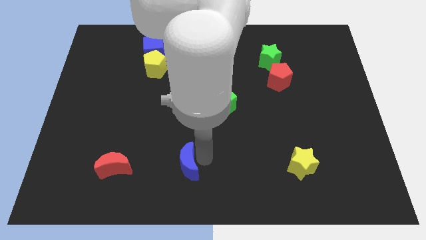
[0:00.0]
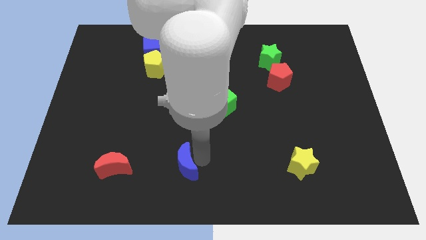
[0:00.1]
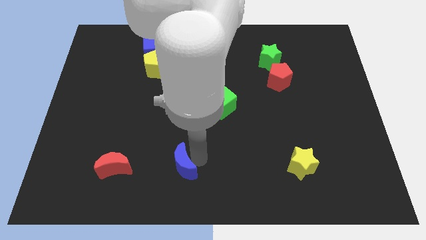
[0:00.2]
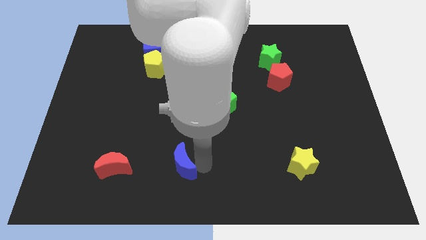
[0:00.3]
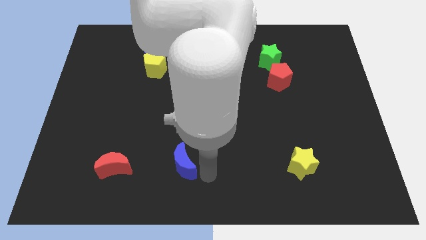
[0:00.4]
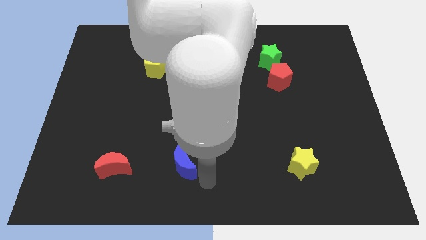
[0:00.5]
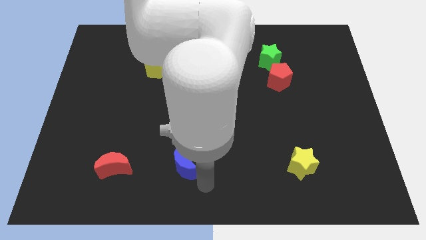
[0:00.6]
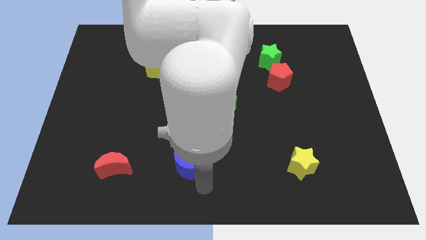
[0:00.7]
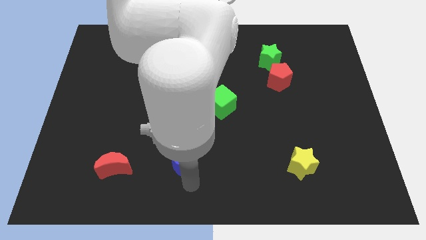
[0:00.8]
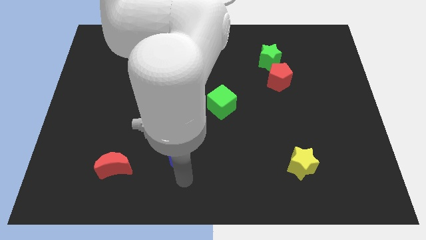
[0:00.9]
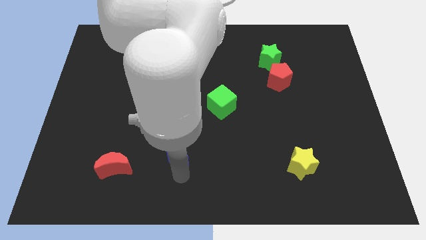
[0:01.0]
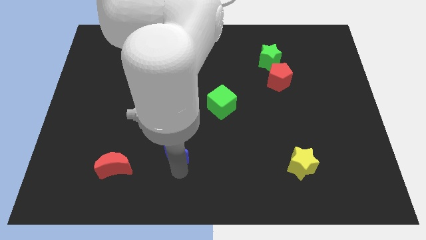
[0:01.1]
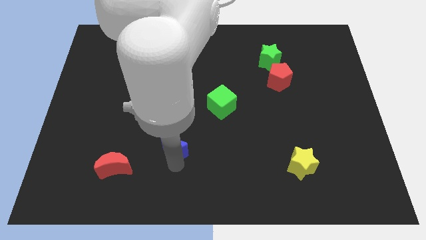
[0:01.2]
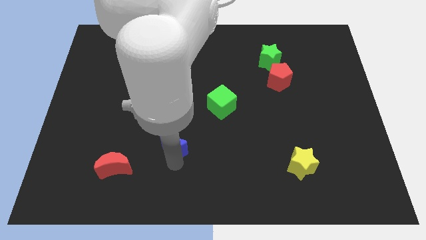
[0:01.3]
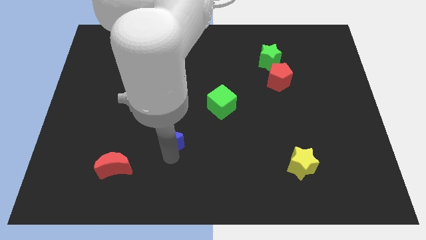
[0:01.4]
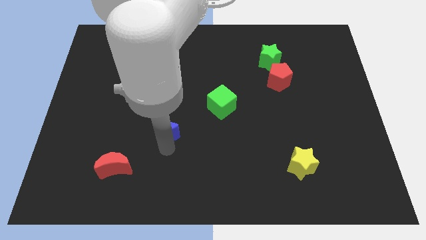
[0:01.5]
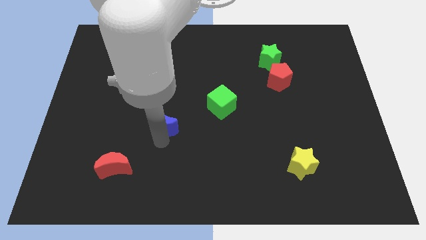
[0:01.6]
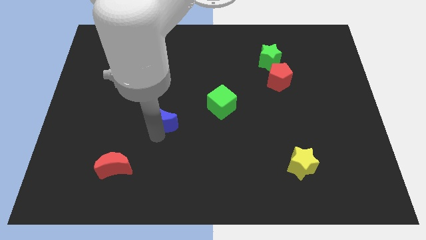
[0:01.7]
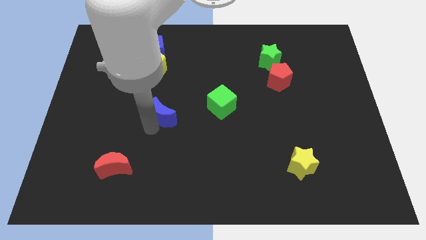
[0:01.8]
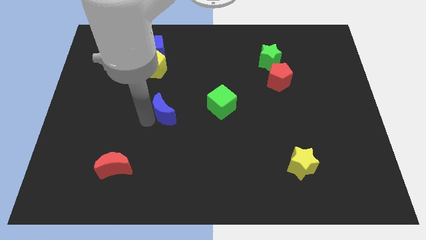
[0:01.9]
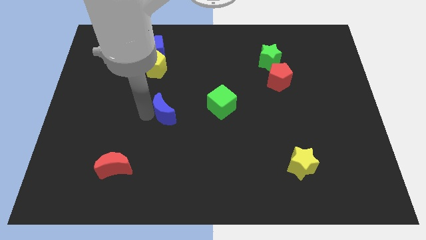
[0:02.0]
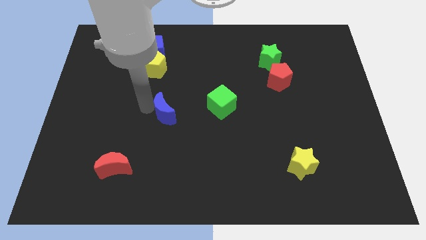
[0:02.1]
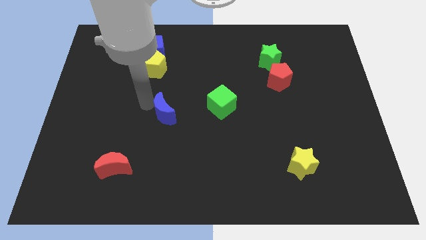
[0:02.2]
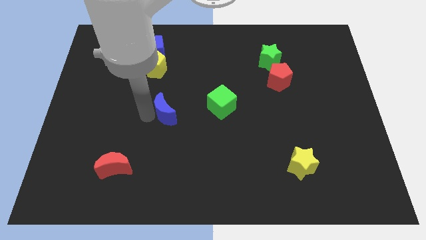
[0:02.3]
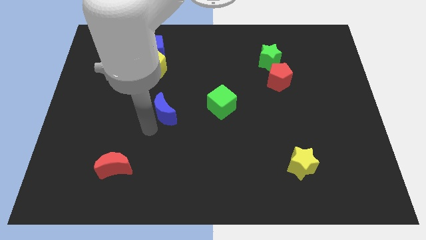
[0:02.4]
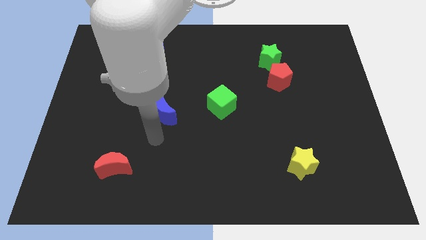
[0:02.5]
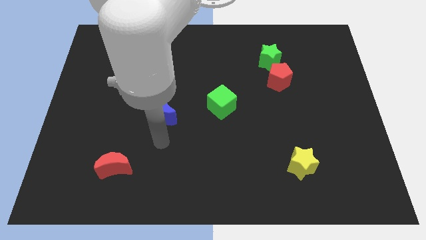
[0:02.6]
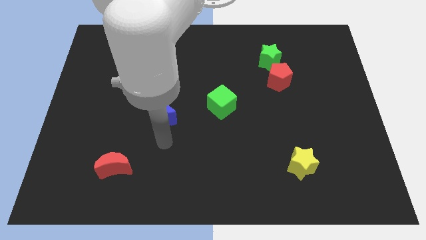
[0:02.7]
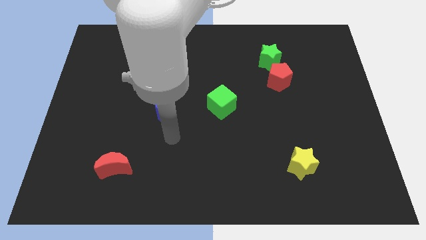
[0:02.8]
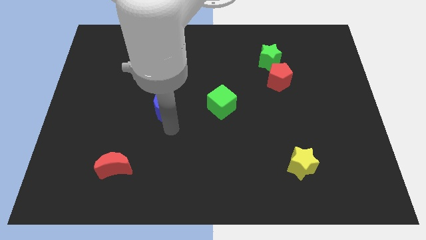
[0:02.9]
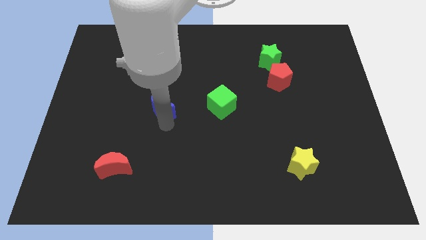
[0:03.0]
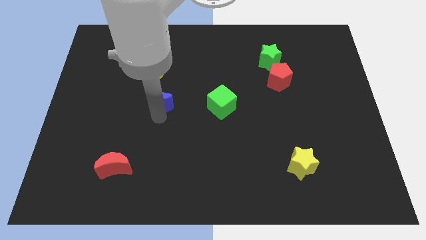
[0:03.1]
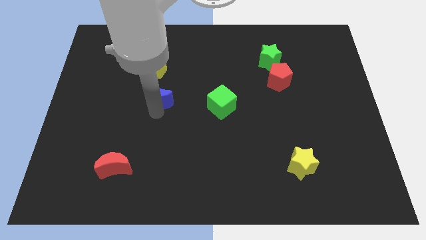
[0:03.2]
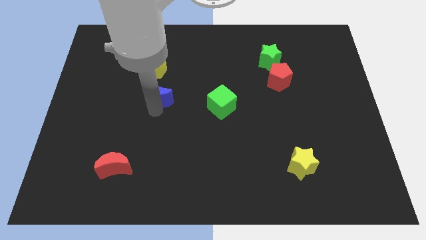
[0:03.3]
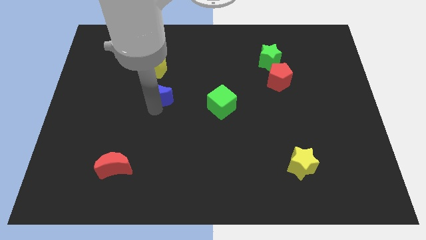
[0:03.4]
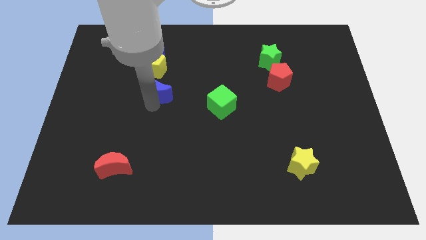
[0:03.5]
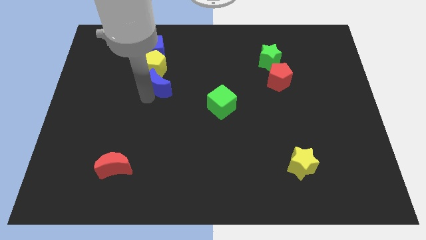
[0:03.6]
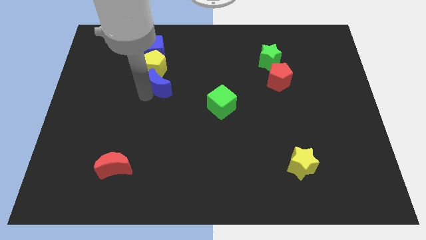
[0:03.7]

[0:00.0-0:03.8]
put the blue crescent underneath the yellow pentagon to form a vertical line of blocks

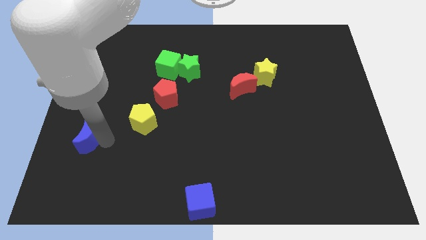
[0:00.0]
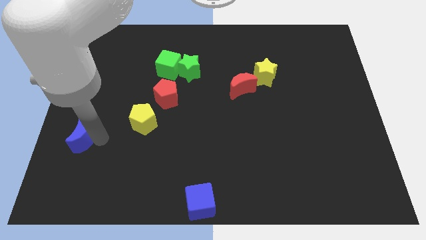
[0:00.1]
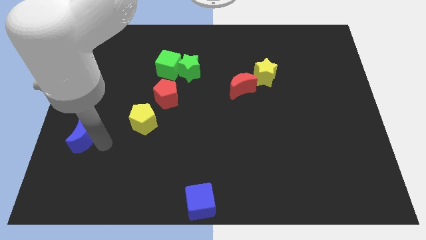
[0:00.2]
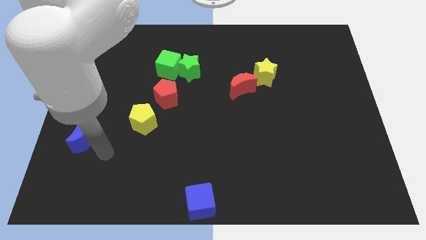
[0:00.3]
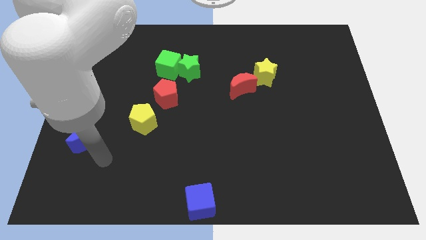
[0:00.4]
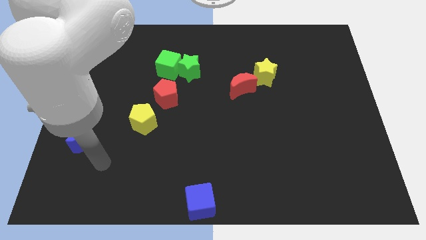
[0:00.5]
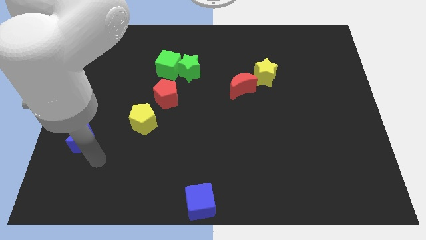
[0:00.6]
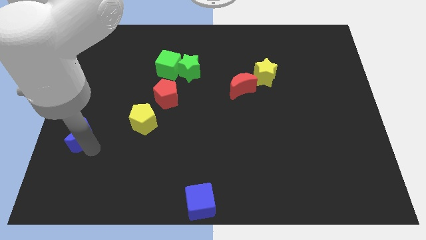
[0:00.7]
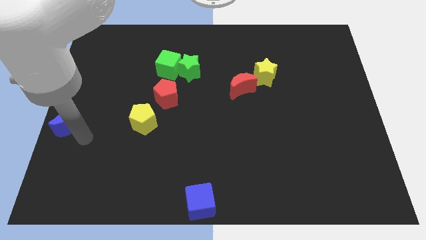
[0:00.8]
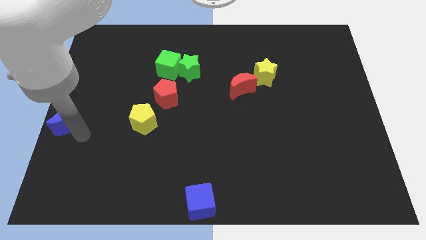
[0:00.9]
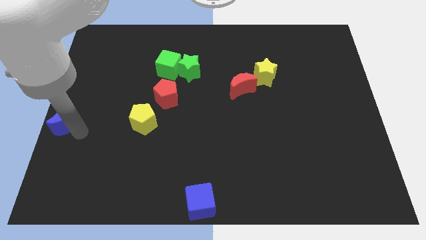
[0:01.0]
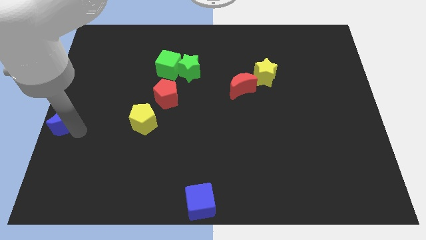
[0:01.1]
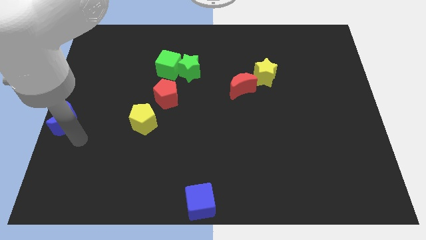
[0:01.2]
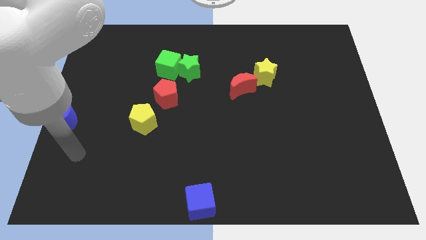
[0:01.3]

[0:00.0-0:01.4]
place the blue moon left to the yellow pentagon

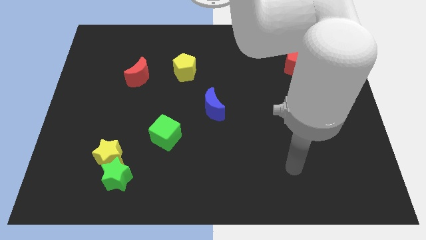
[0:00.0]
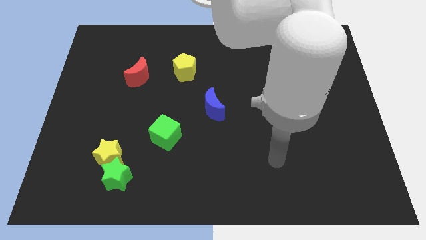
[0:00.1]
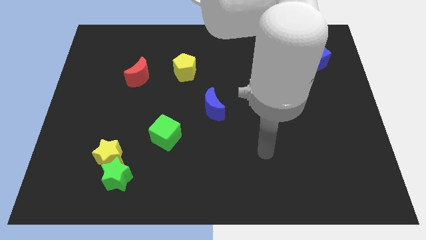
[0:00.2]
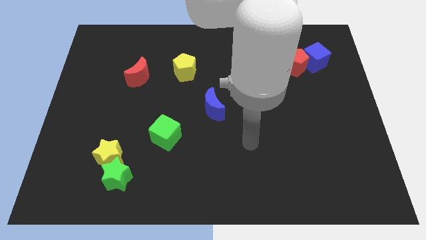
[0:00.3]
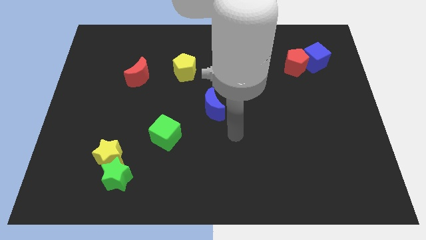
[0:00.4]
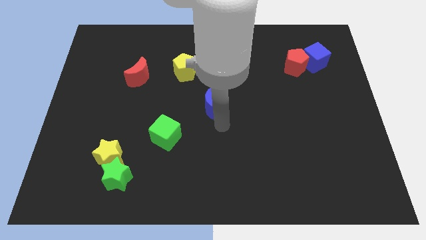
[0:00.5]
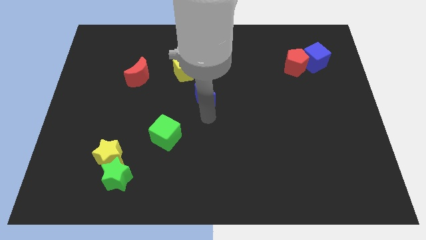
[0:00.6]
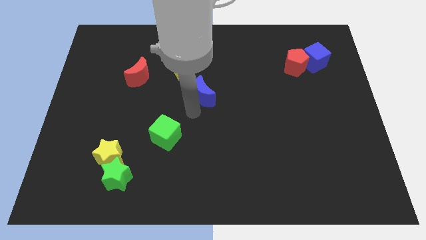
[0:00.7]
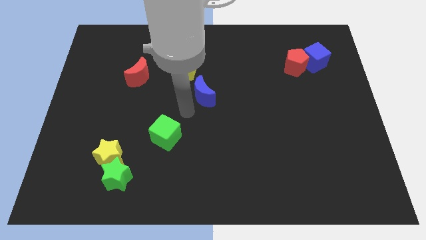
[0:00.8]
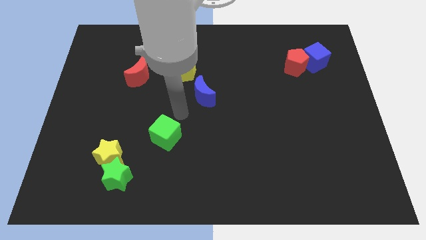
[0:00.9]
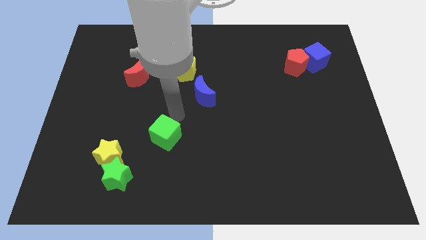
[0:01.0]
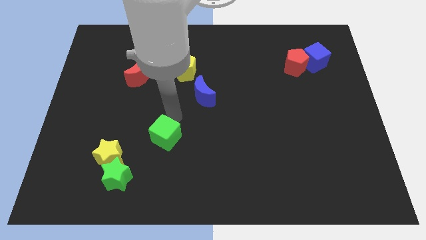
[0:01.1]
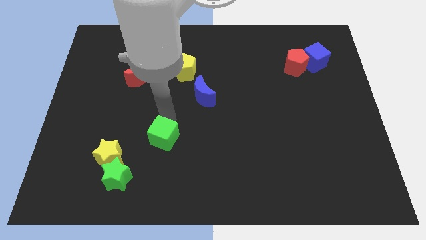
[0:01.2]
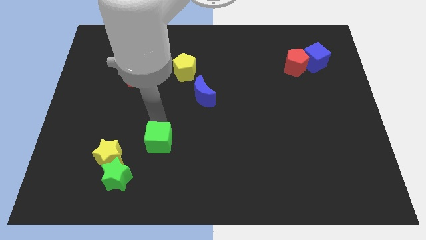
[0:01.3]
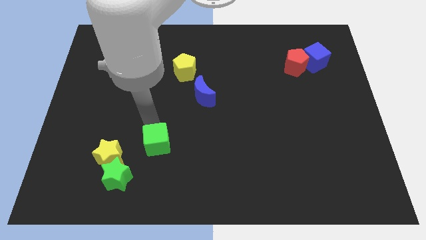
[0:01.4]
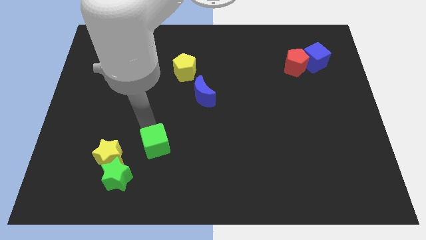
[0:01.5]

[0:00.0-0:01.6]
move the arm to the green cube

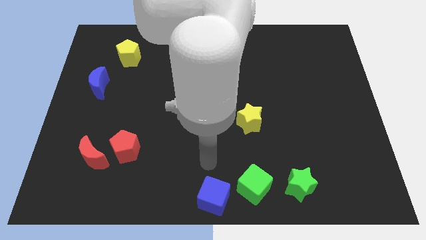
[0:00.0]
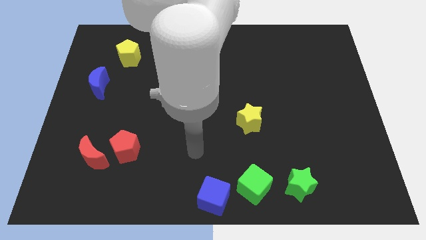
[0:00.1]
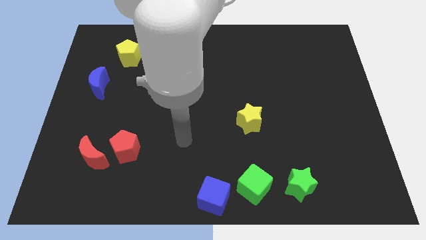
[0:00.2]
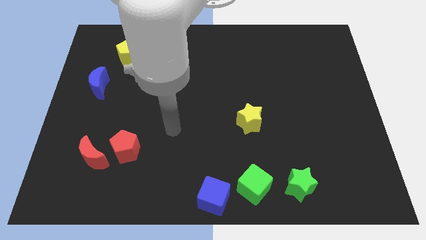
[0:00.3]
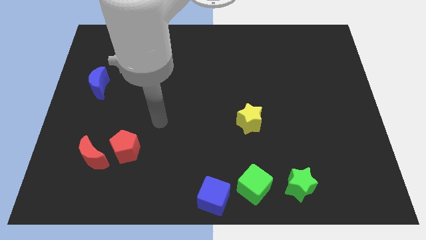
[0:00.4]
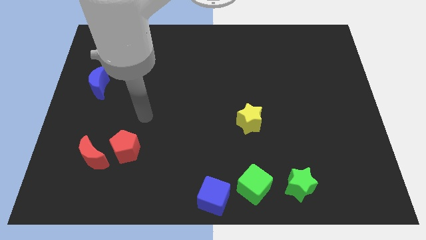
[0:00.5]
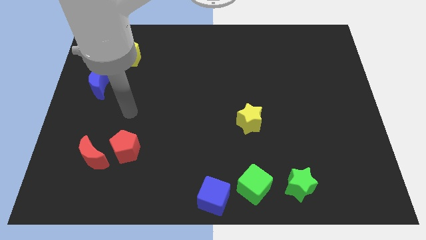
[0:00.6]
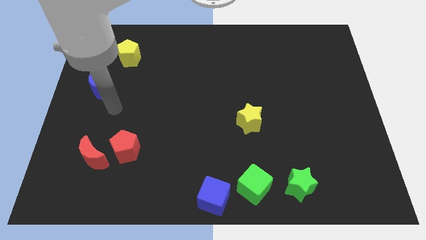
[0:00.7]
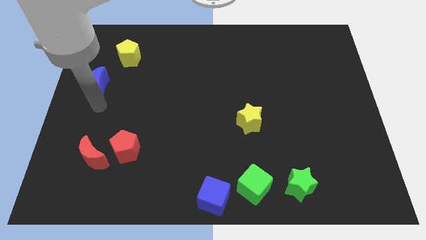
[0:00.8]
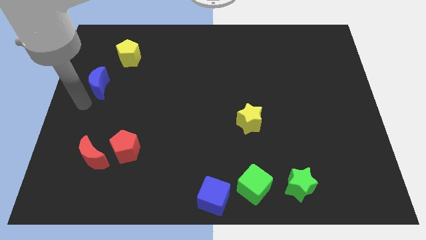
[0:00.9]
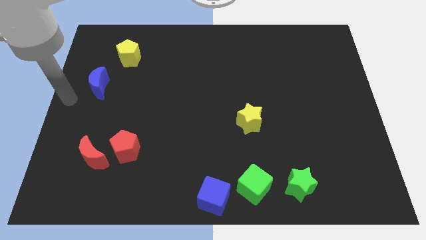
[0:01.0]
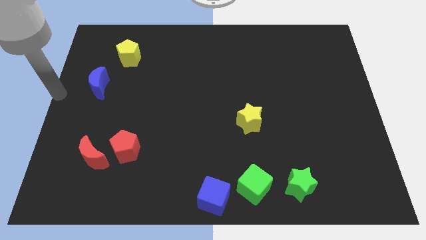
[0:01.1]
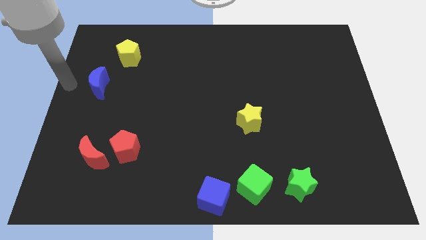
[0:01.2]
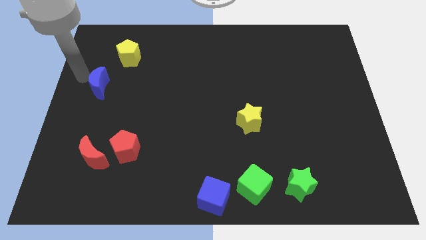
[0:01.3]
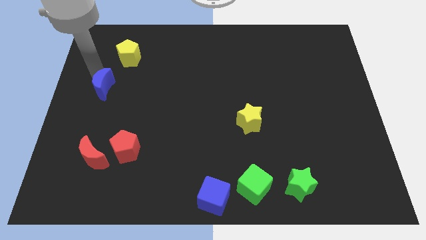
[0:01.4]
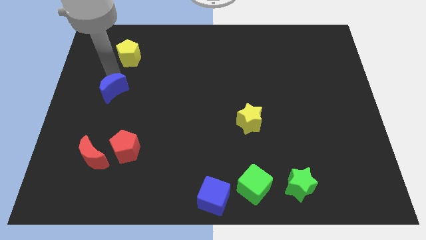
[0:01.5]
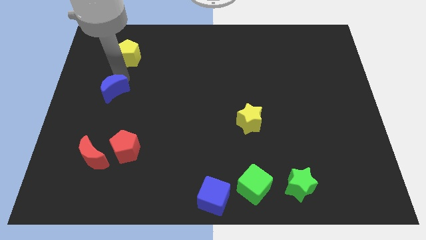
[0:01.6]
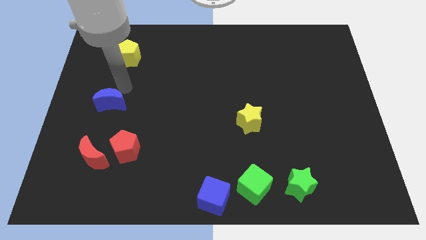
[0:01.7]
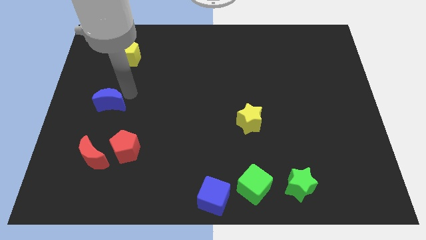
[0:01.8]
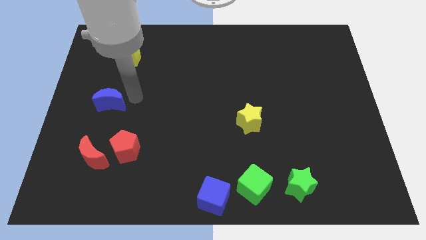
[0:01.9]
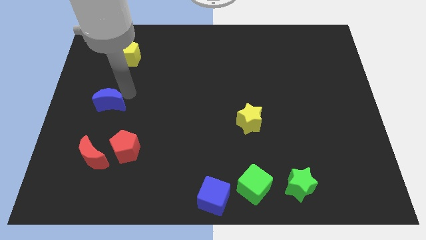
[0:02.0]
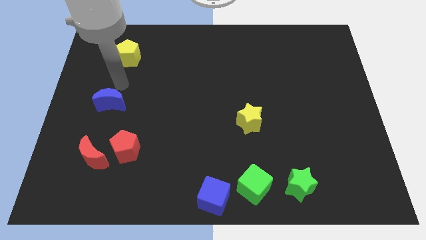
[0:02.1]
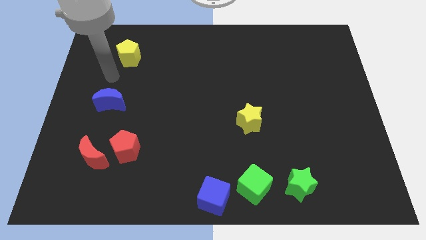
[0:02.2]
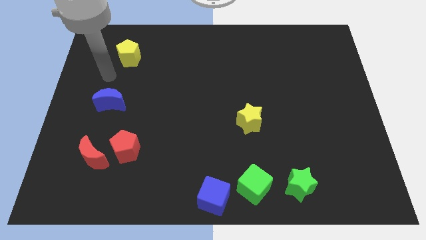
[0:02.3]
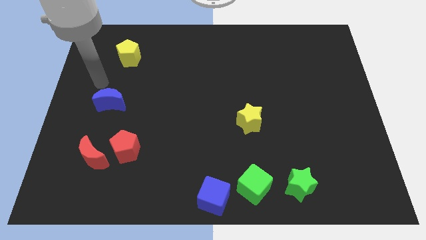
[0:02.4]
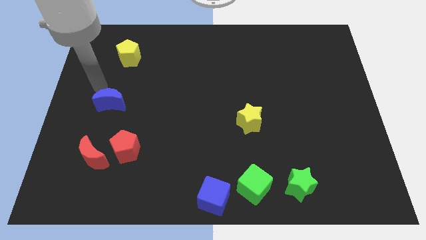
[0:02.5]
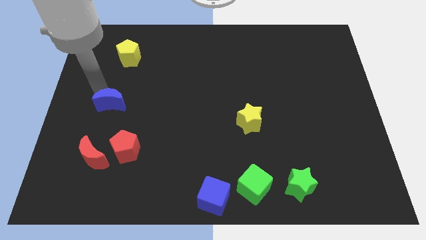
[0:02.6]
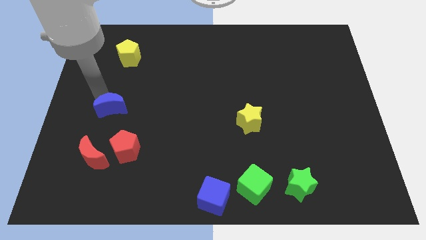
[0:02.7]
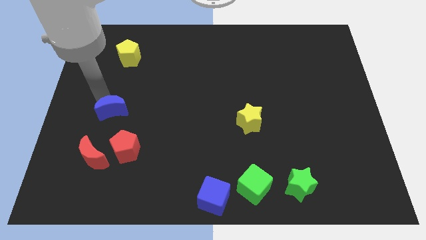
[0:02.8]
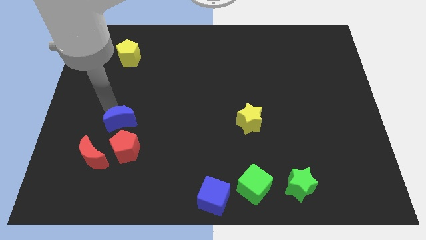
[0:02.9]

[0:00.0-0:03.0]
place the blue moon above the red pentagon
